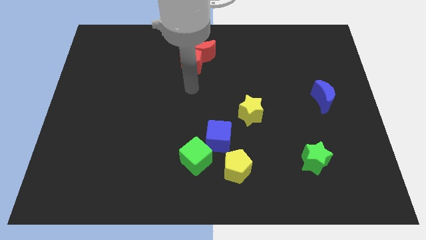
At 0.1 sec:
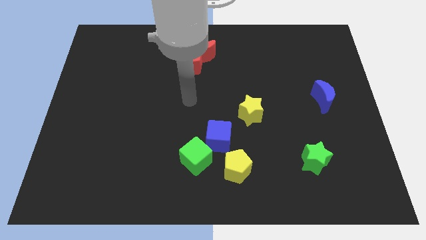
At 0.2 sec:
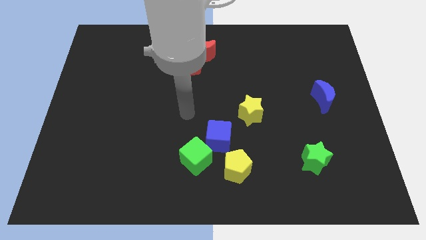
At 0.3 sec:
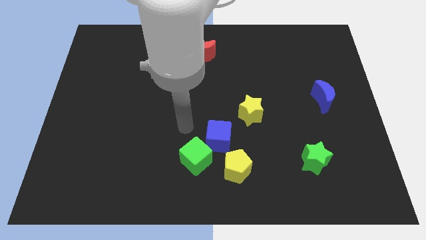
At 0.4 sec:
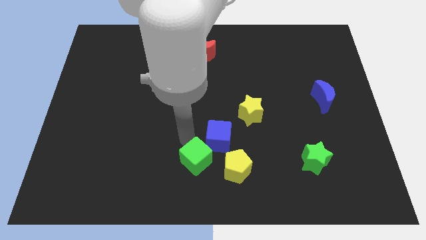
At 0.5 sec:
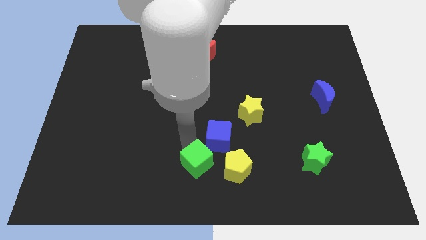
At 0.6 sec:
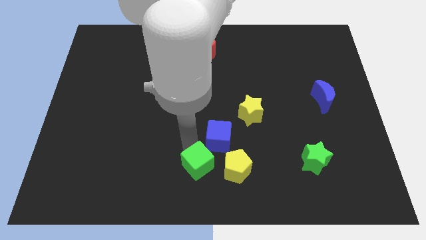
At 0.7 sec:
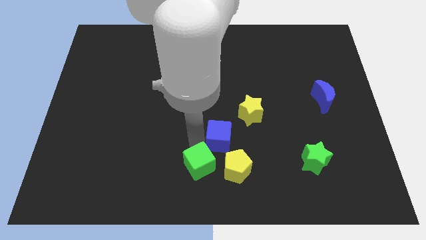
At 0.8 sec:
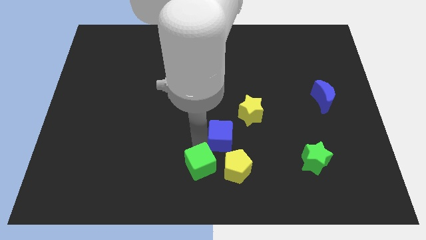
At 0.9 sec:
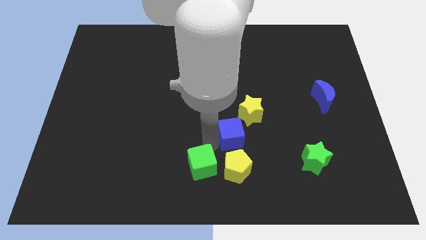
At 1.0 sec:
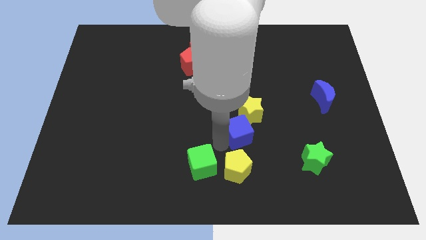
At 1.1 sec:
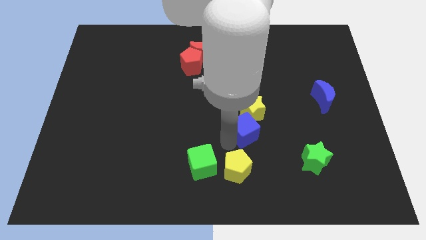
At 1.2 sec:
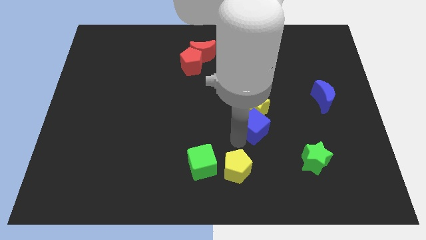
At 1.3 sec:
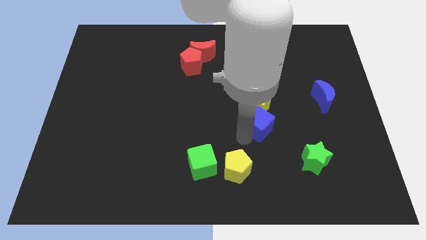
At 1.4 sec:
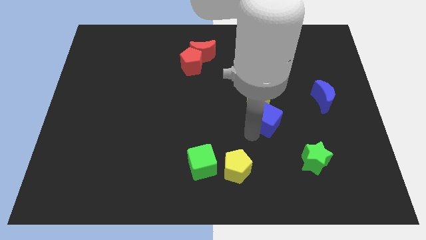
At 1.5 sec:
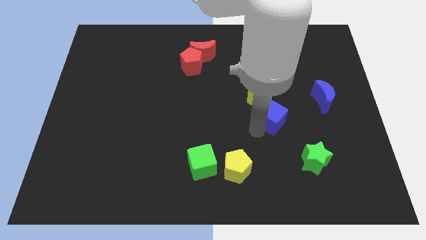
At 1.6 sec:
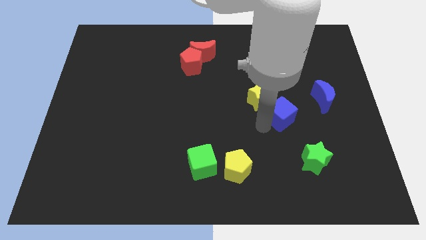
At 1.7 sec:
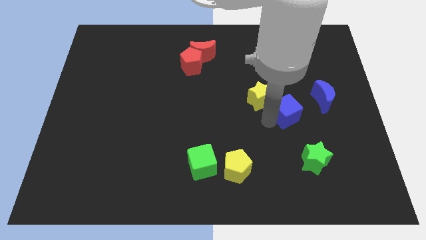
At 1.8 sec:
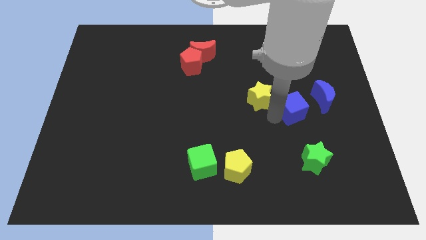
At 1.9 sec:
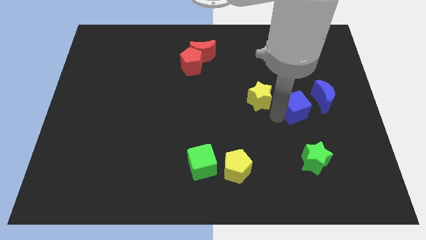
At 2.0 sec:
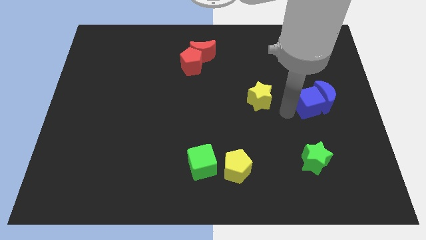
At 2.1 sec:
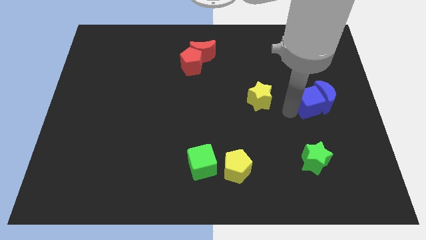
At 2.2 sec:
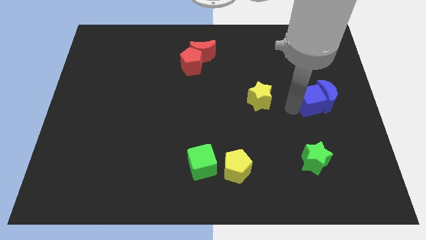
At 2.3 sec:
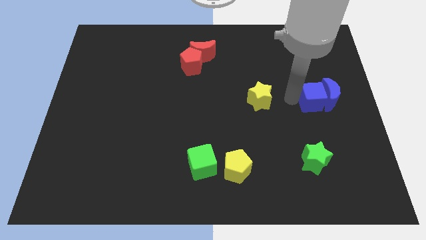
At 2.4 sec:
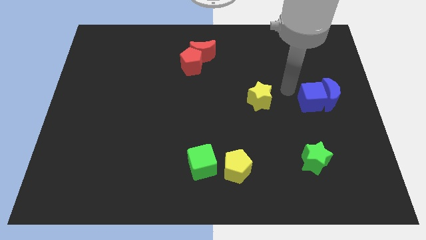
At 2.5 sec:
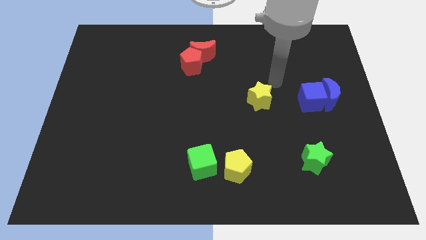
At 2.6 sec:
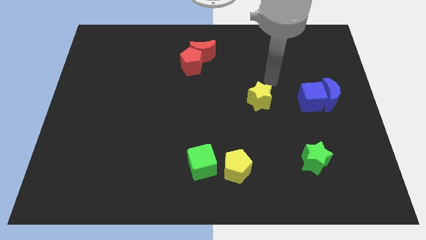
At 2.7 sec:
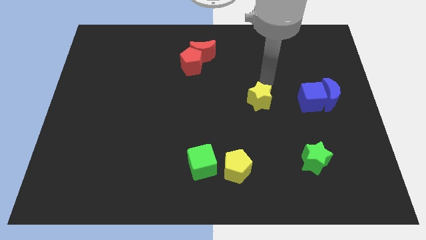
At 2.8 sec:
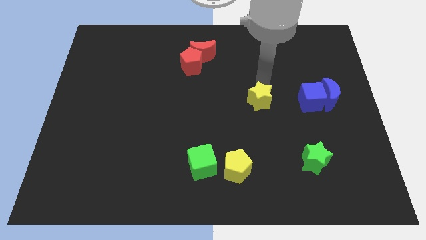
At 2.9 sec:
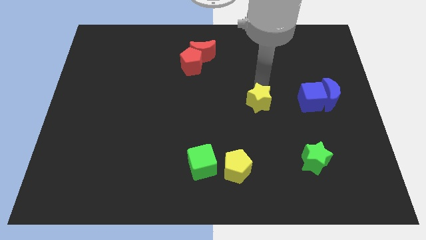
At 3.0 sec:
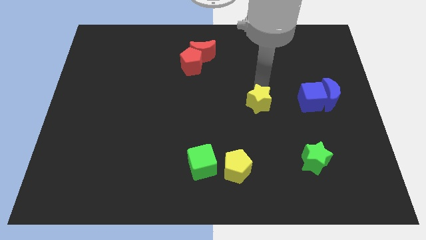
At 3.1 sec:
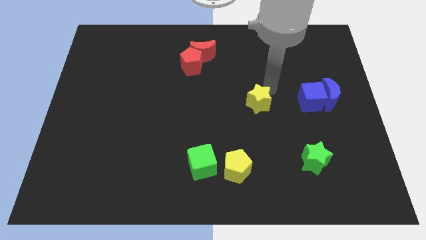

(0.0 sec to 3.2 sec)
push the blue cube into the blue crescent

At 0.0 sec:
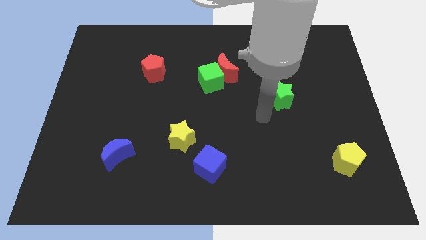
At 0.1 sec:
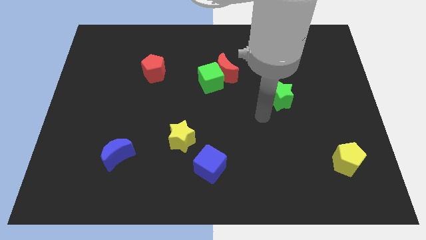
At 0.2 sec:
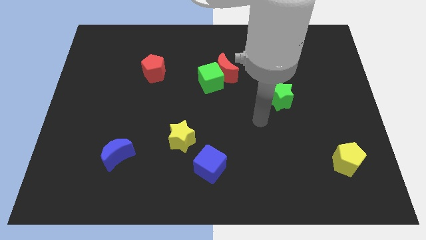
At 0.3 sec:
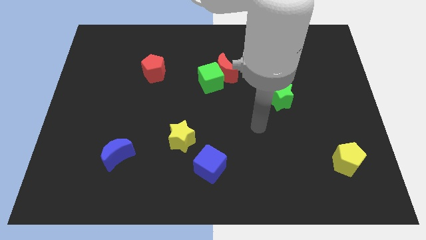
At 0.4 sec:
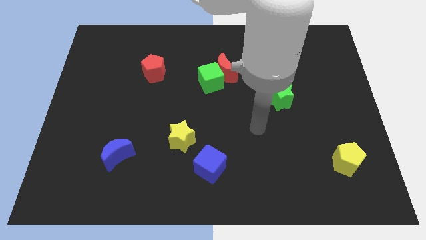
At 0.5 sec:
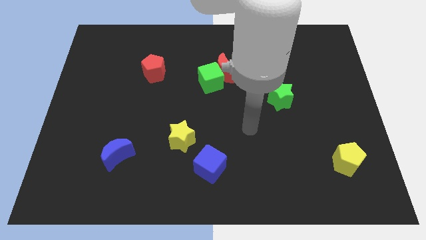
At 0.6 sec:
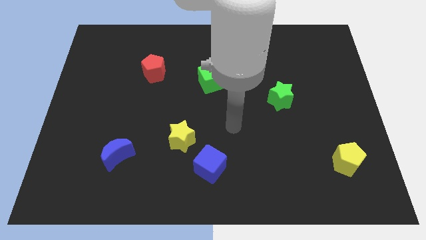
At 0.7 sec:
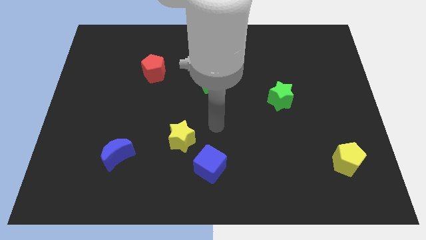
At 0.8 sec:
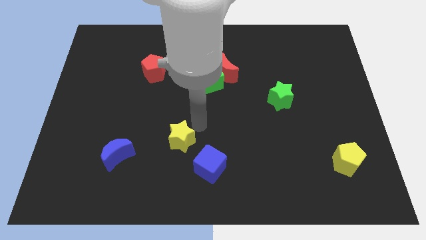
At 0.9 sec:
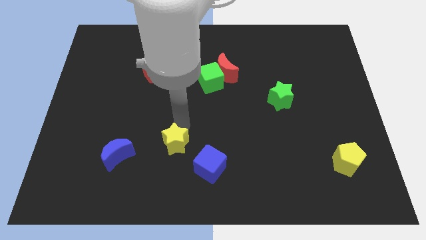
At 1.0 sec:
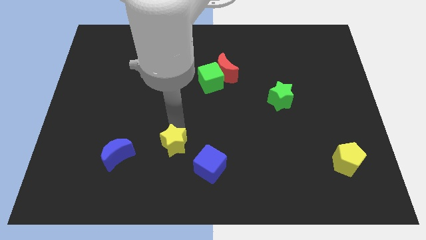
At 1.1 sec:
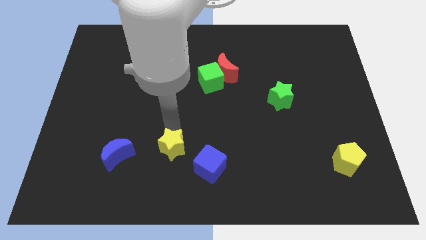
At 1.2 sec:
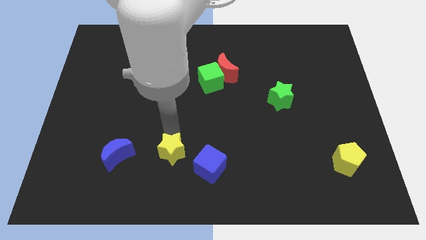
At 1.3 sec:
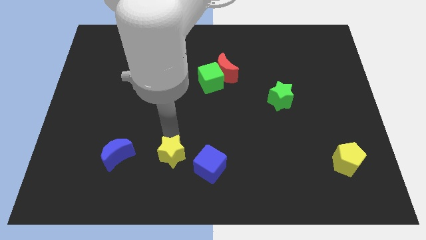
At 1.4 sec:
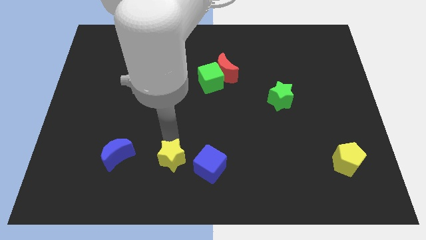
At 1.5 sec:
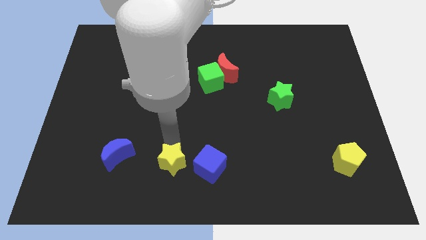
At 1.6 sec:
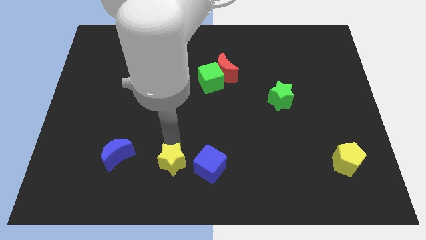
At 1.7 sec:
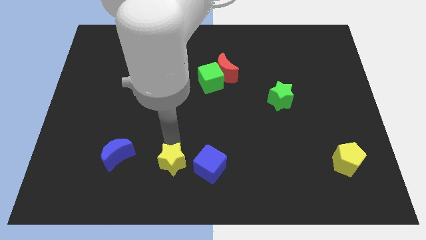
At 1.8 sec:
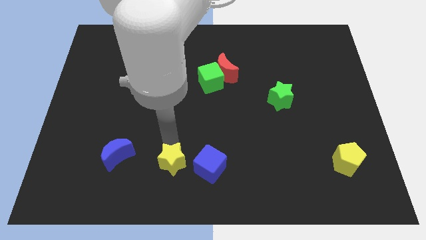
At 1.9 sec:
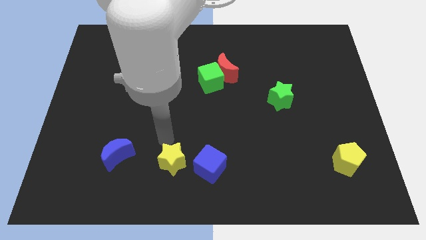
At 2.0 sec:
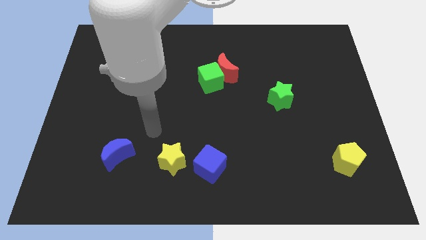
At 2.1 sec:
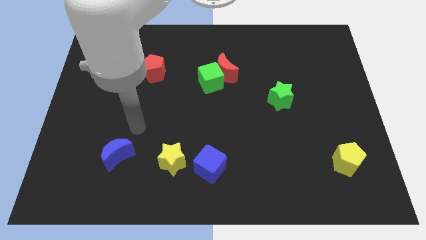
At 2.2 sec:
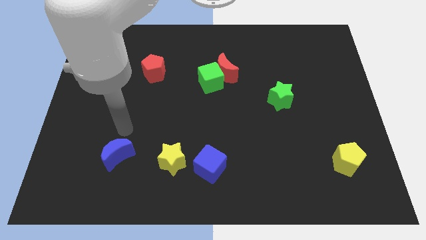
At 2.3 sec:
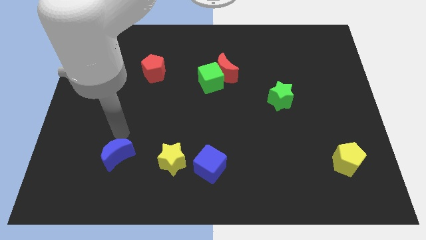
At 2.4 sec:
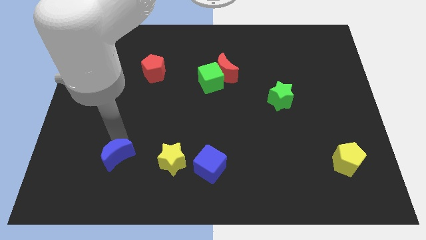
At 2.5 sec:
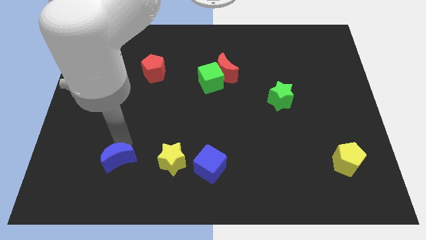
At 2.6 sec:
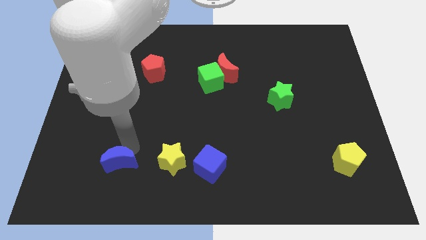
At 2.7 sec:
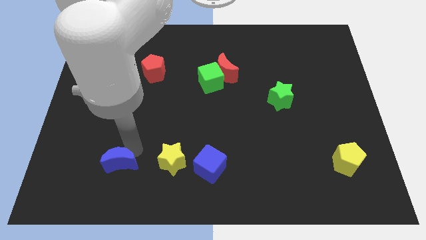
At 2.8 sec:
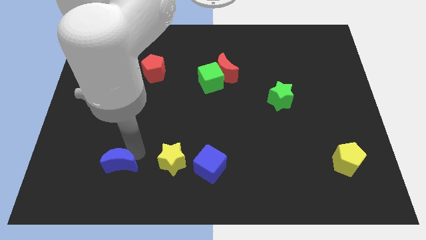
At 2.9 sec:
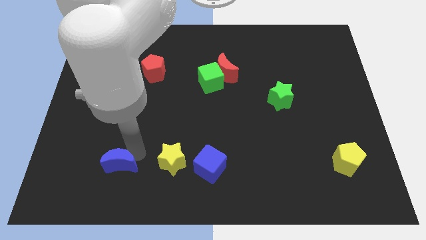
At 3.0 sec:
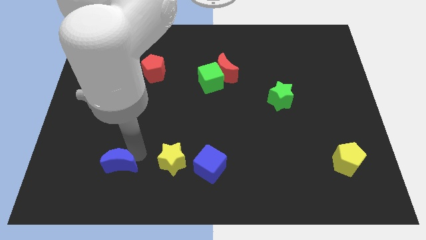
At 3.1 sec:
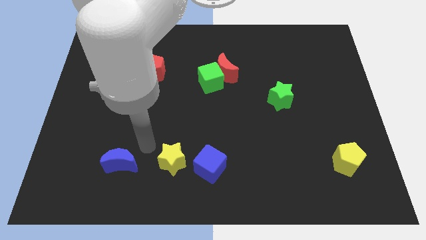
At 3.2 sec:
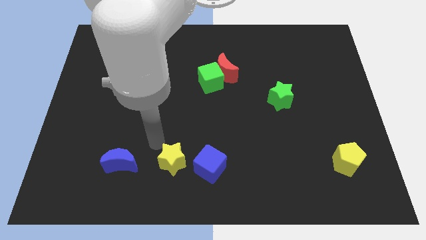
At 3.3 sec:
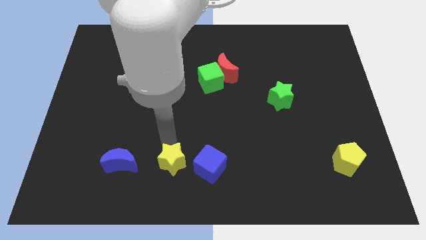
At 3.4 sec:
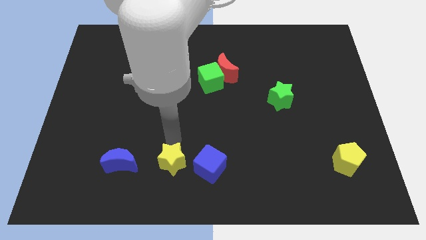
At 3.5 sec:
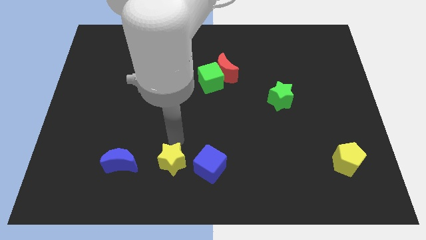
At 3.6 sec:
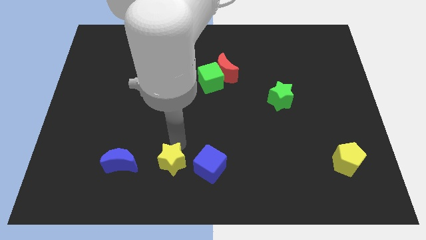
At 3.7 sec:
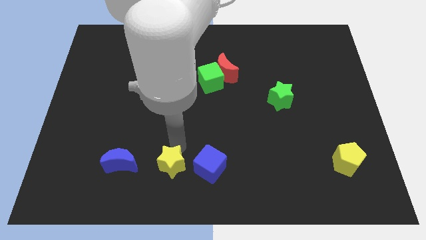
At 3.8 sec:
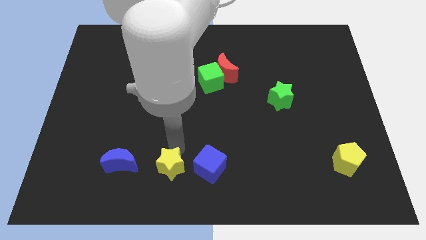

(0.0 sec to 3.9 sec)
push yellow star and blue crescent downwards

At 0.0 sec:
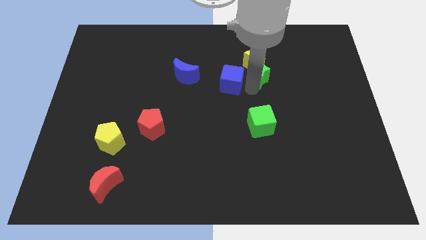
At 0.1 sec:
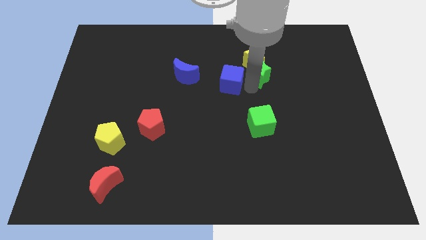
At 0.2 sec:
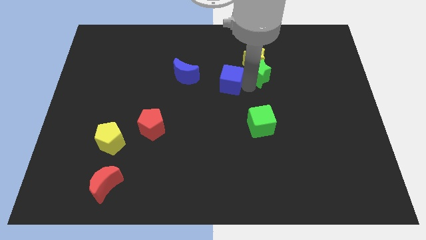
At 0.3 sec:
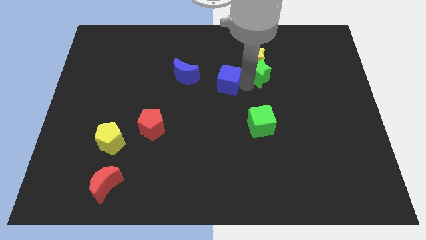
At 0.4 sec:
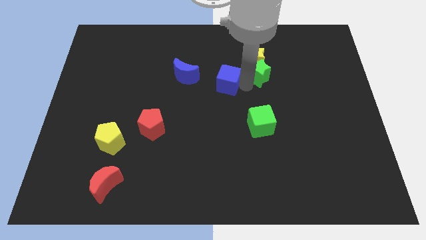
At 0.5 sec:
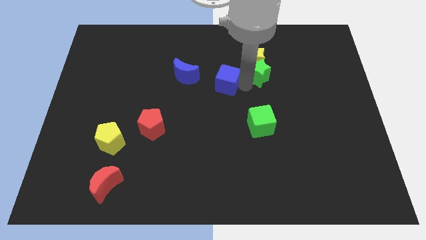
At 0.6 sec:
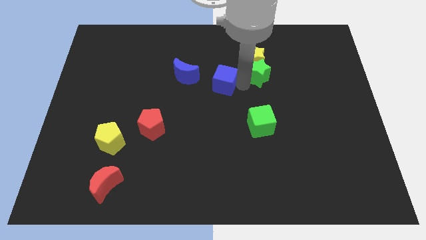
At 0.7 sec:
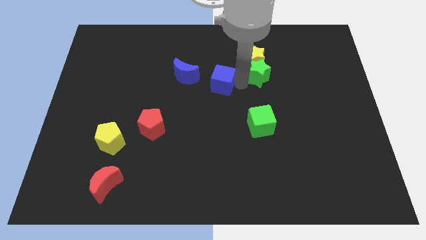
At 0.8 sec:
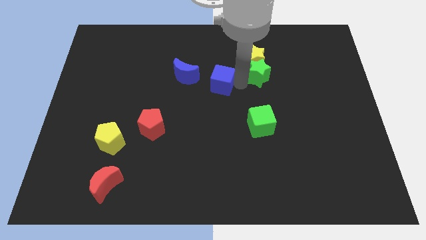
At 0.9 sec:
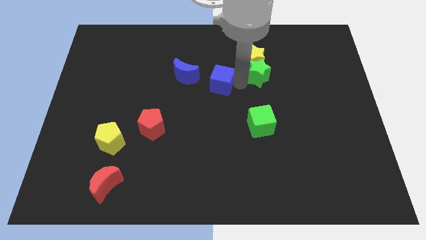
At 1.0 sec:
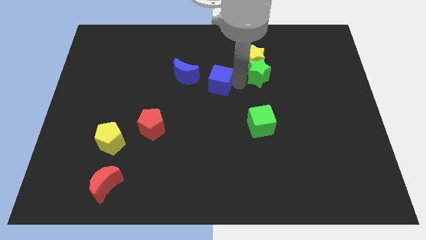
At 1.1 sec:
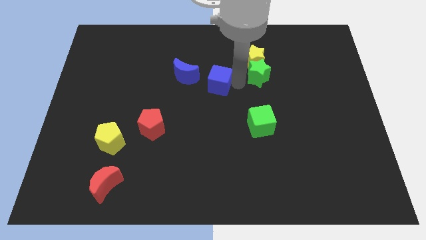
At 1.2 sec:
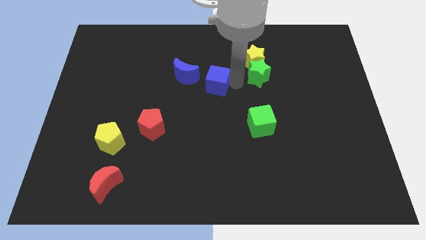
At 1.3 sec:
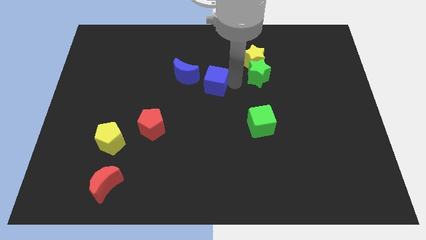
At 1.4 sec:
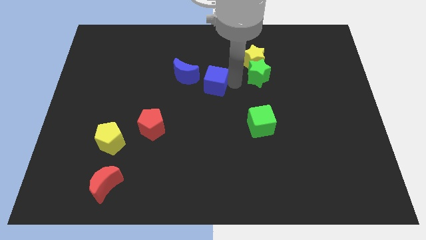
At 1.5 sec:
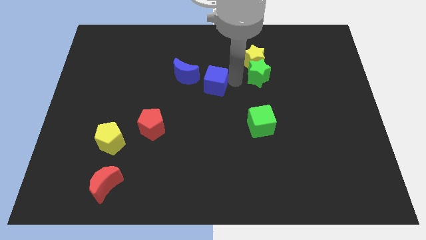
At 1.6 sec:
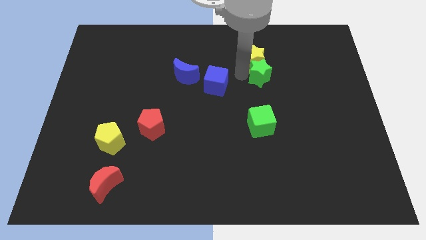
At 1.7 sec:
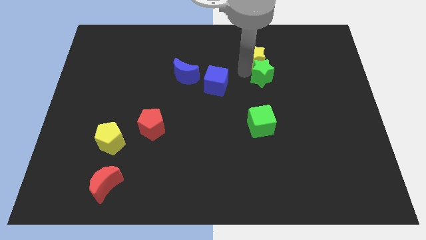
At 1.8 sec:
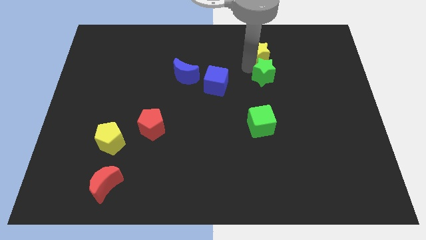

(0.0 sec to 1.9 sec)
separate the blue cube and stars
